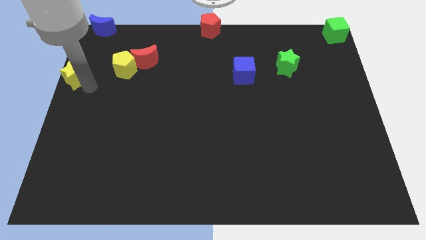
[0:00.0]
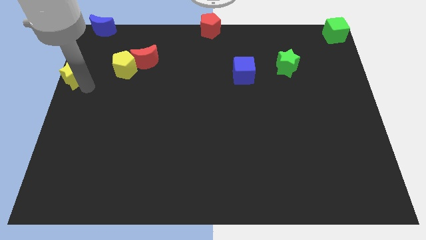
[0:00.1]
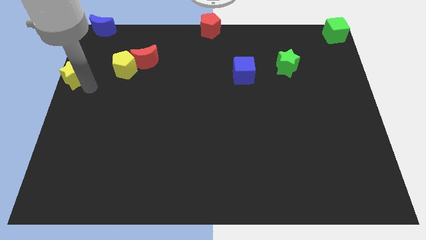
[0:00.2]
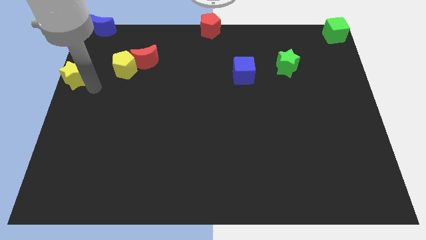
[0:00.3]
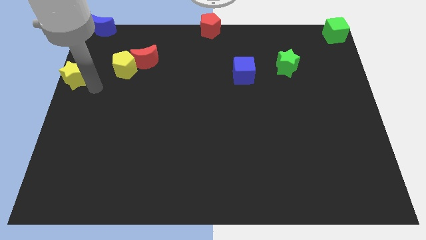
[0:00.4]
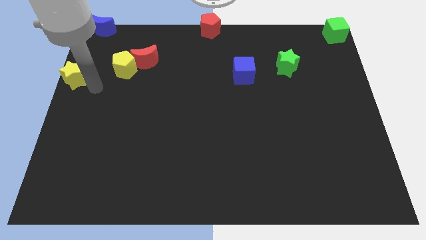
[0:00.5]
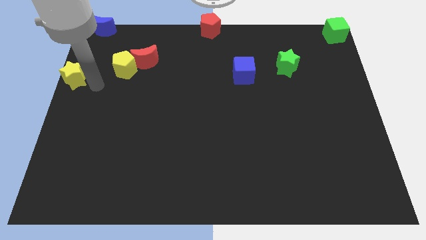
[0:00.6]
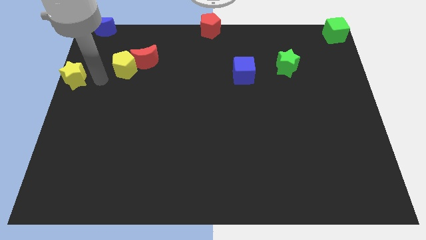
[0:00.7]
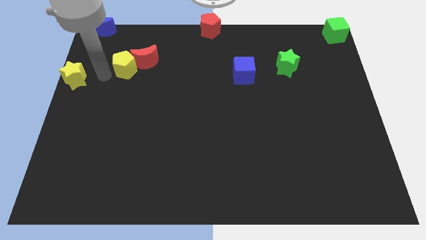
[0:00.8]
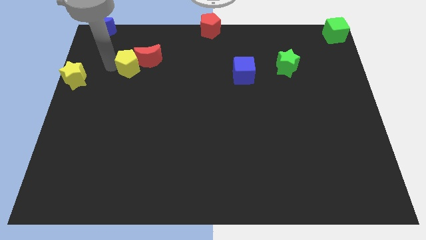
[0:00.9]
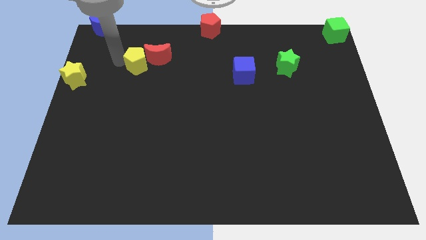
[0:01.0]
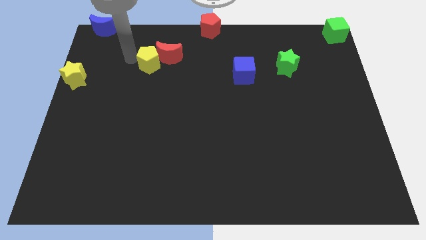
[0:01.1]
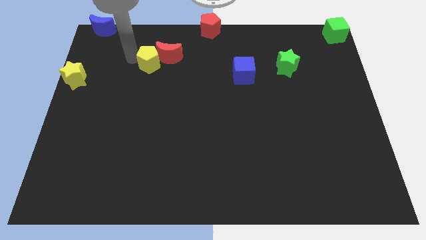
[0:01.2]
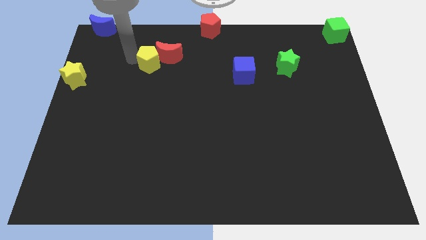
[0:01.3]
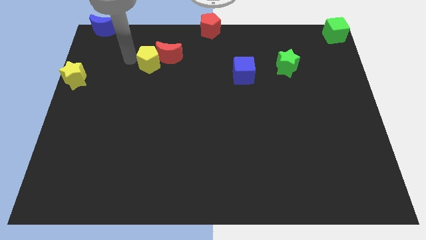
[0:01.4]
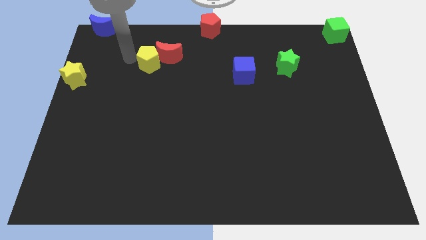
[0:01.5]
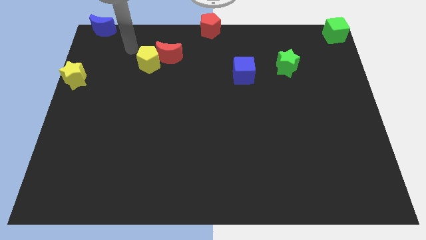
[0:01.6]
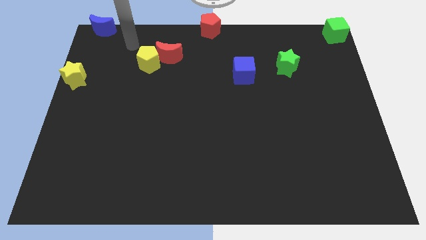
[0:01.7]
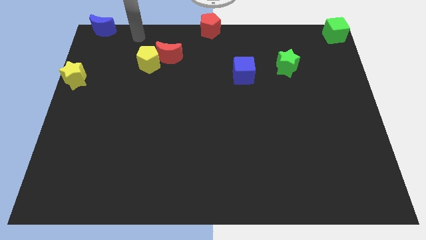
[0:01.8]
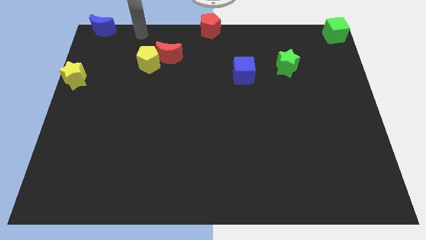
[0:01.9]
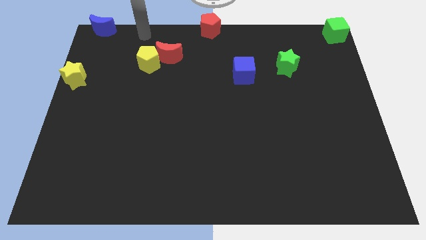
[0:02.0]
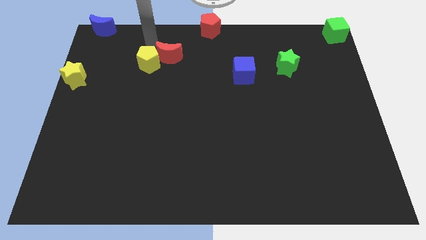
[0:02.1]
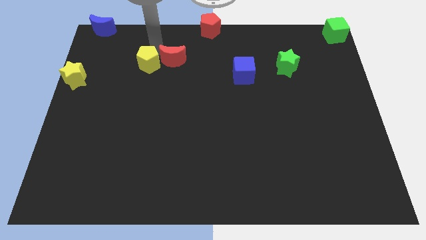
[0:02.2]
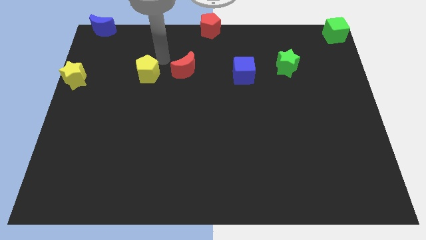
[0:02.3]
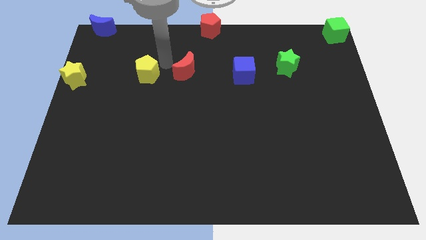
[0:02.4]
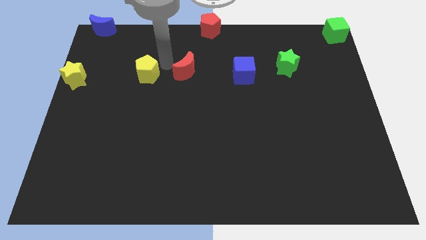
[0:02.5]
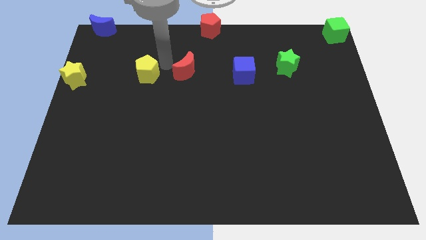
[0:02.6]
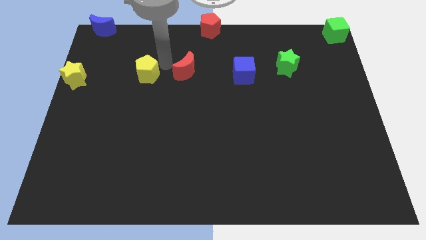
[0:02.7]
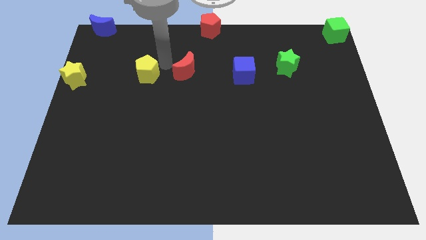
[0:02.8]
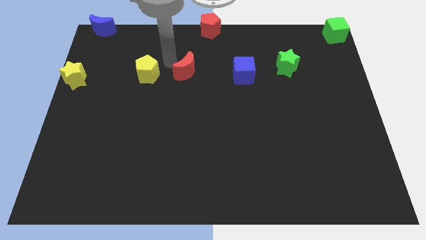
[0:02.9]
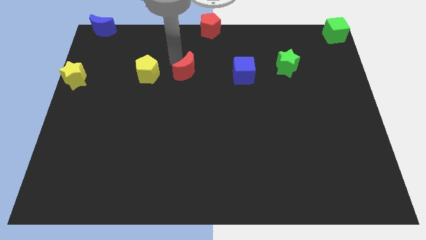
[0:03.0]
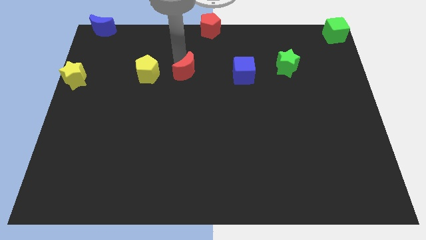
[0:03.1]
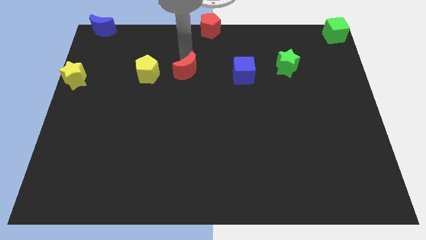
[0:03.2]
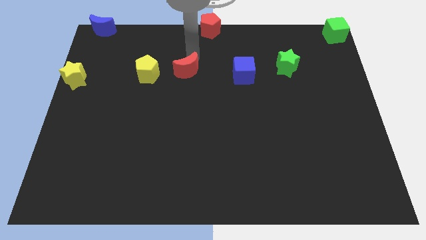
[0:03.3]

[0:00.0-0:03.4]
separate red moon from yellow pentagon

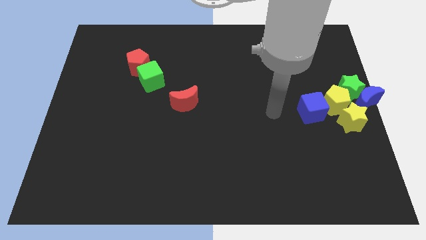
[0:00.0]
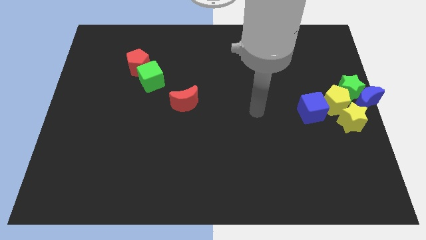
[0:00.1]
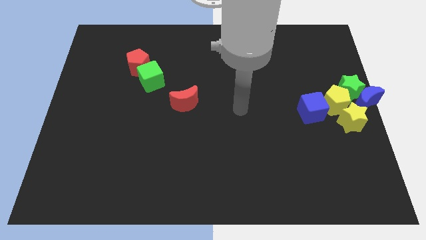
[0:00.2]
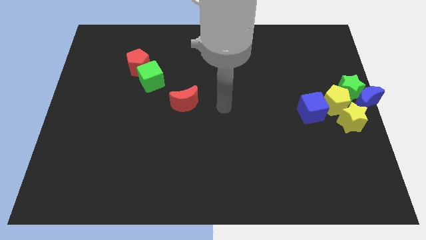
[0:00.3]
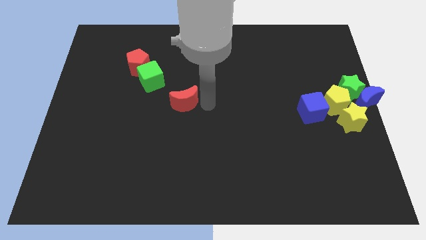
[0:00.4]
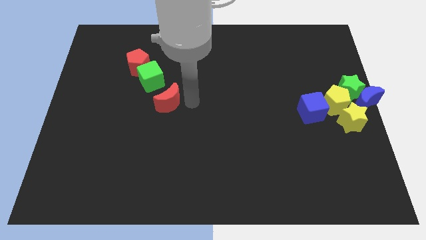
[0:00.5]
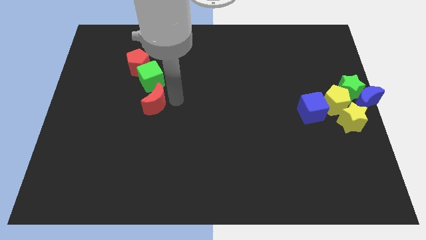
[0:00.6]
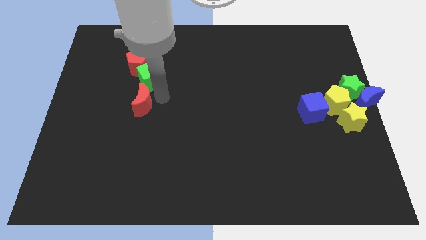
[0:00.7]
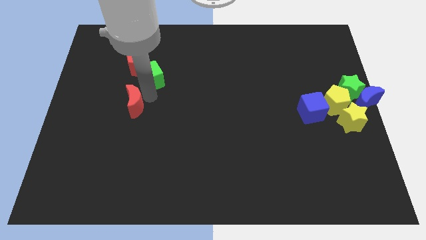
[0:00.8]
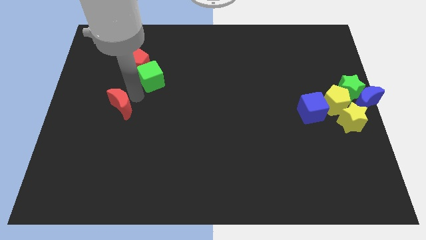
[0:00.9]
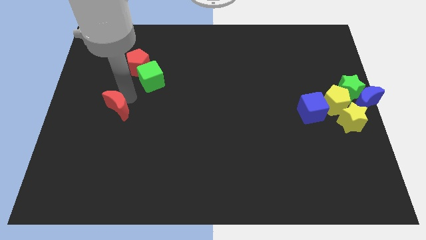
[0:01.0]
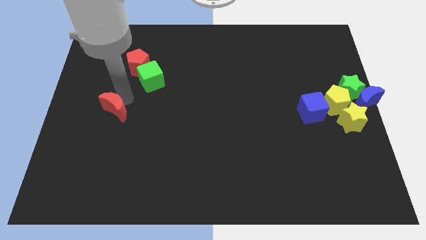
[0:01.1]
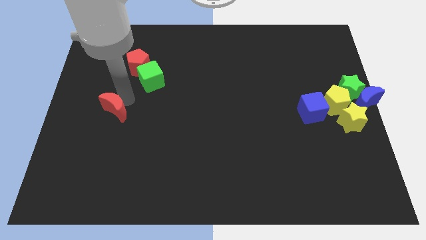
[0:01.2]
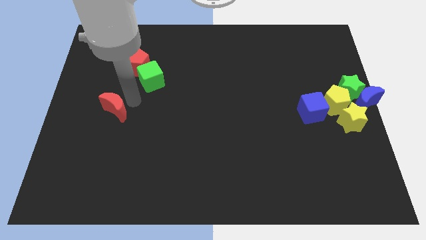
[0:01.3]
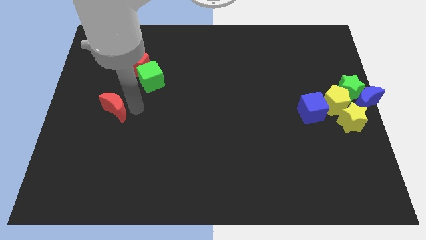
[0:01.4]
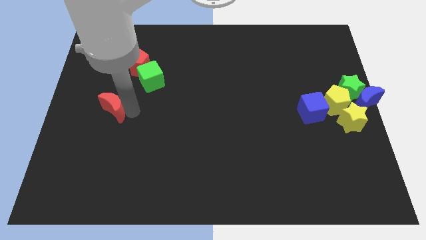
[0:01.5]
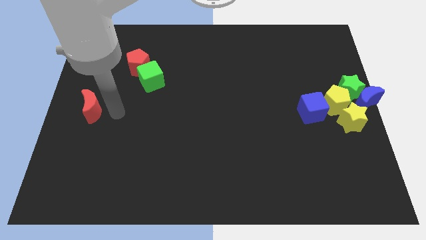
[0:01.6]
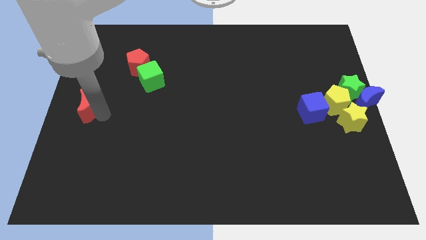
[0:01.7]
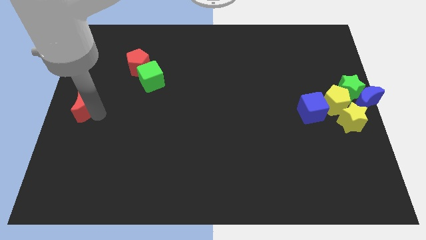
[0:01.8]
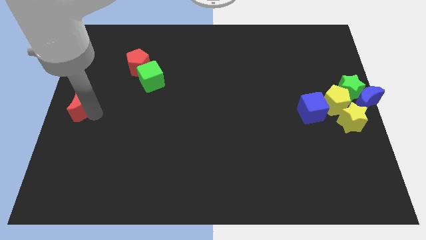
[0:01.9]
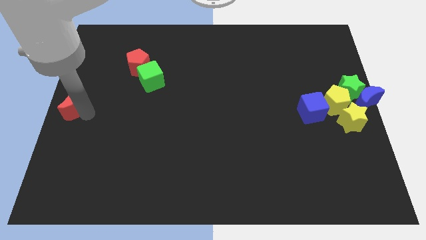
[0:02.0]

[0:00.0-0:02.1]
move the red moon diagonally to green cube

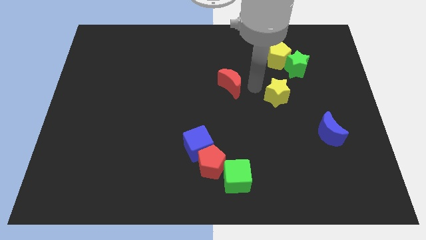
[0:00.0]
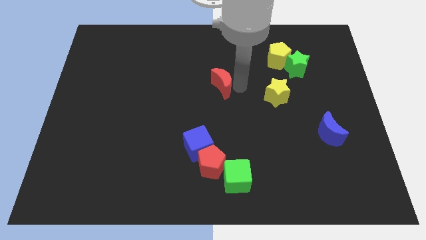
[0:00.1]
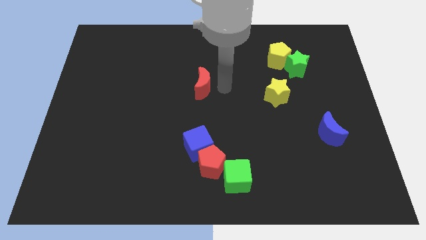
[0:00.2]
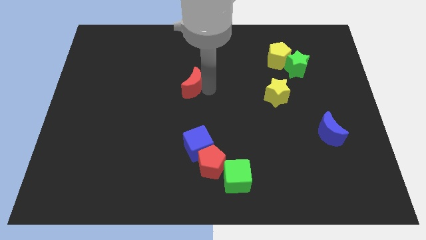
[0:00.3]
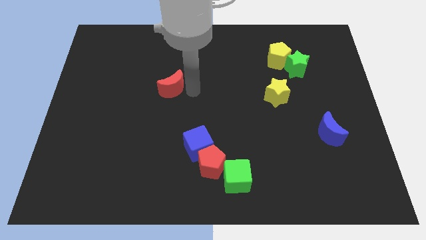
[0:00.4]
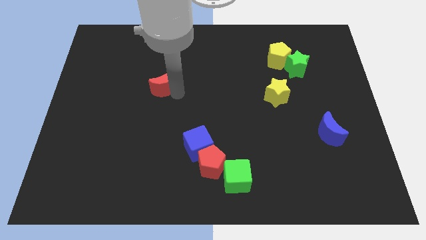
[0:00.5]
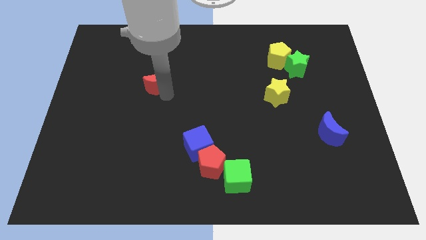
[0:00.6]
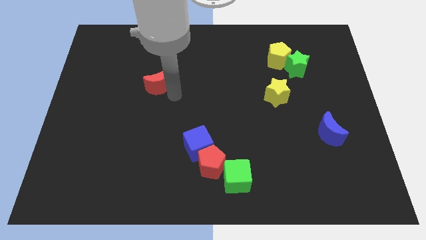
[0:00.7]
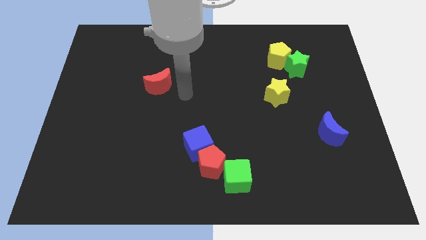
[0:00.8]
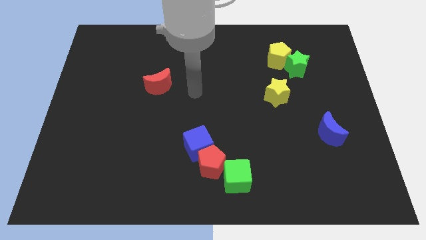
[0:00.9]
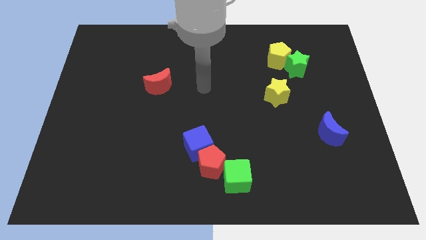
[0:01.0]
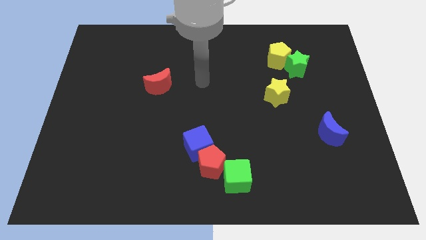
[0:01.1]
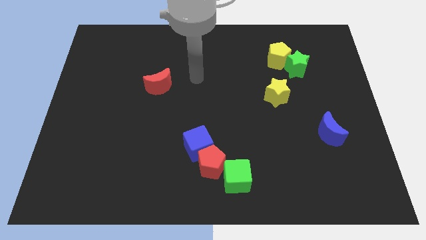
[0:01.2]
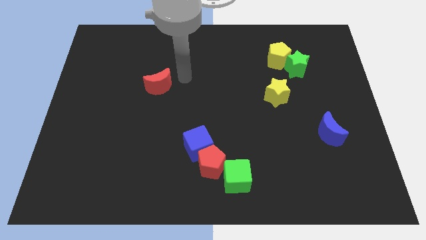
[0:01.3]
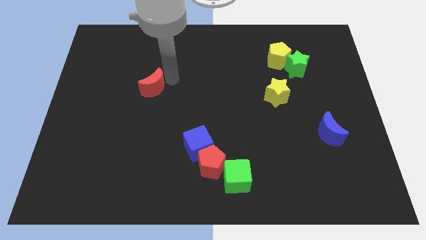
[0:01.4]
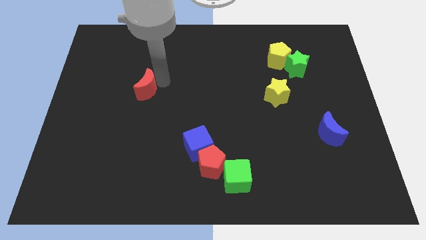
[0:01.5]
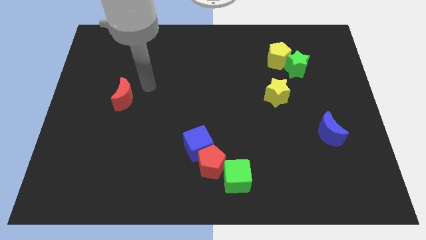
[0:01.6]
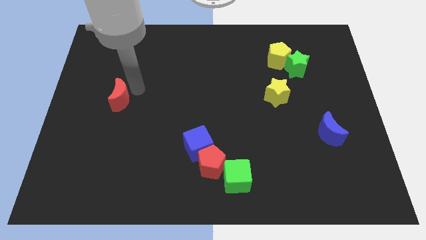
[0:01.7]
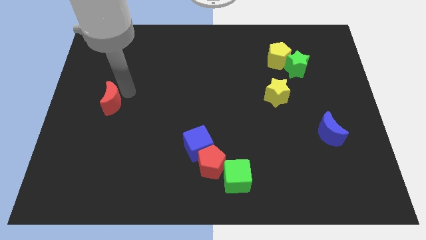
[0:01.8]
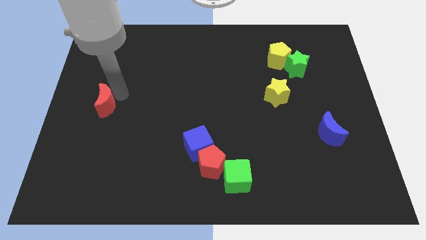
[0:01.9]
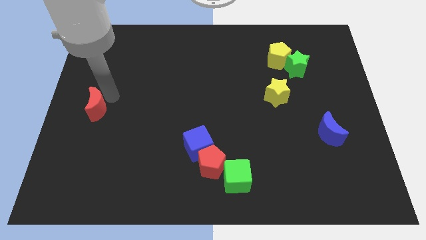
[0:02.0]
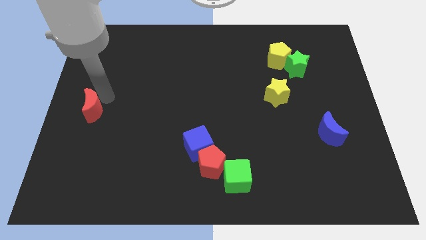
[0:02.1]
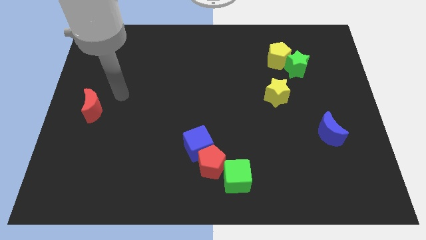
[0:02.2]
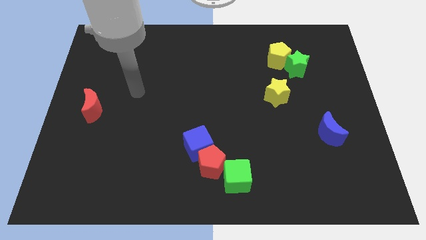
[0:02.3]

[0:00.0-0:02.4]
push the red moon towards left

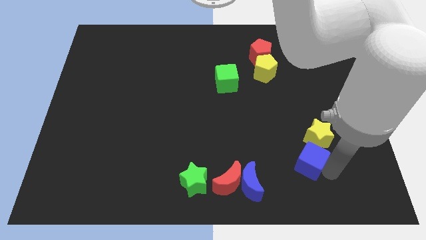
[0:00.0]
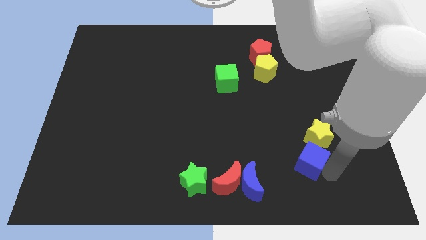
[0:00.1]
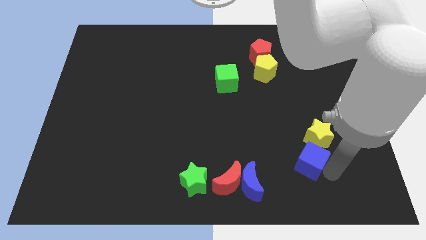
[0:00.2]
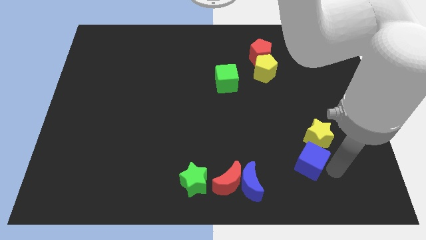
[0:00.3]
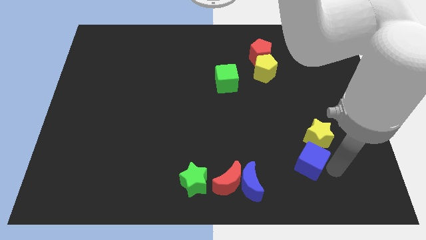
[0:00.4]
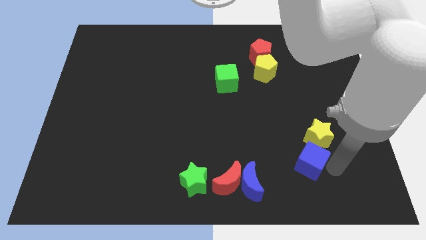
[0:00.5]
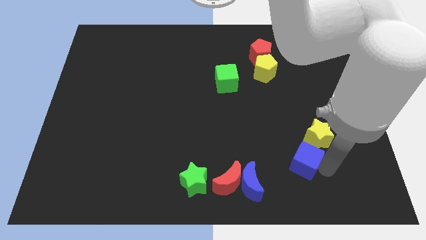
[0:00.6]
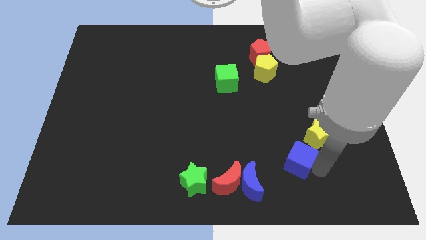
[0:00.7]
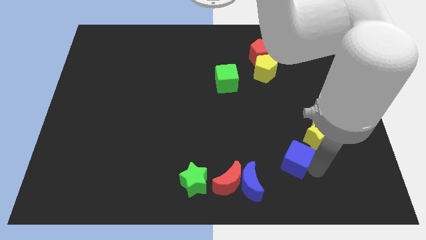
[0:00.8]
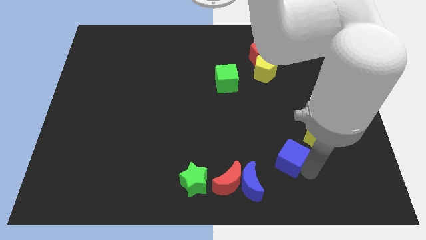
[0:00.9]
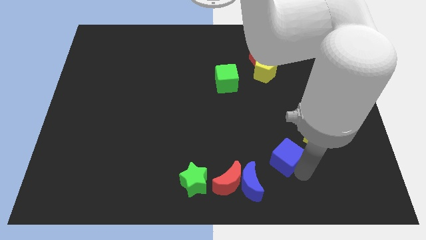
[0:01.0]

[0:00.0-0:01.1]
place the blue cube between the yellow star and blue crescent
